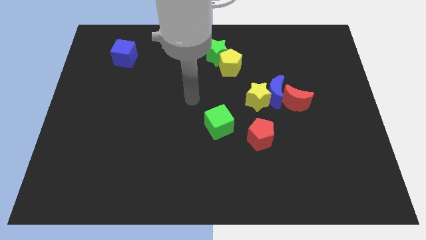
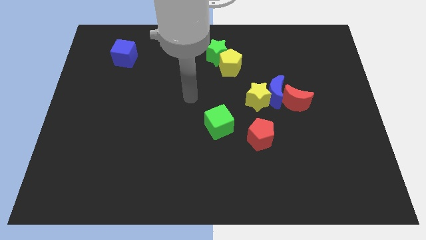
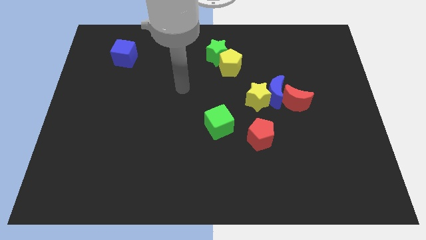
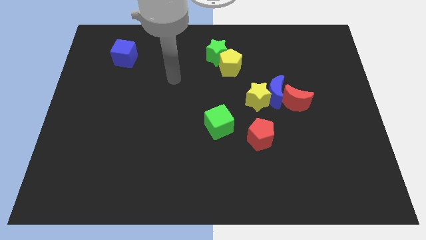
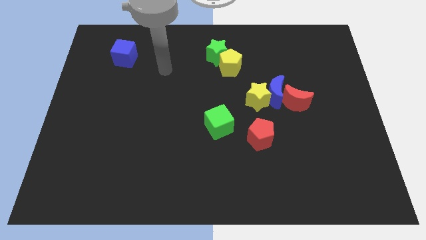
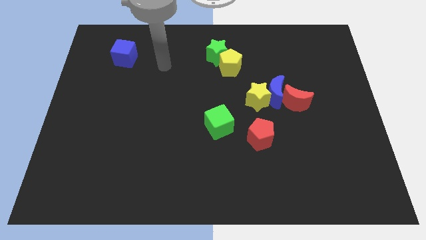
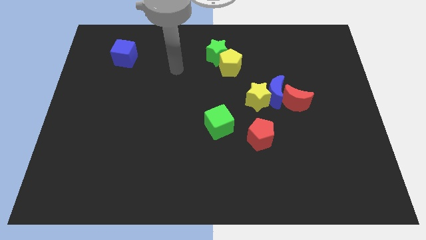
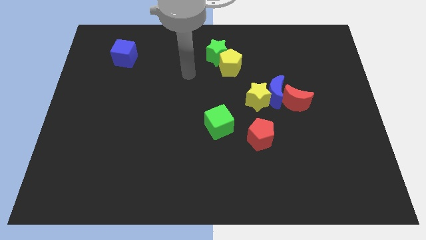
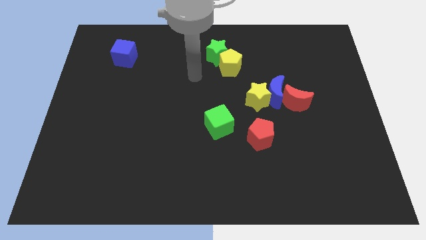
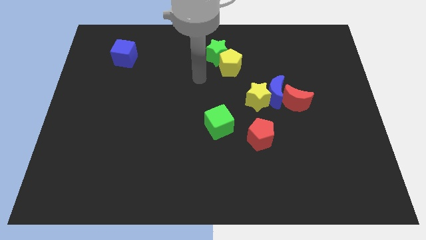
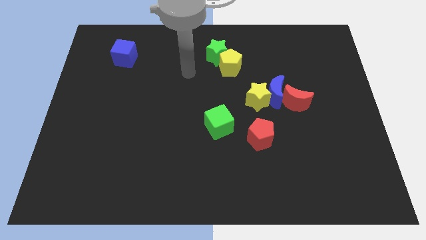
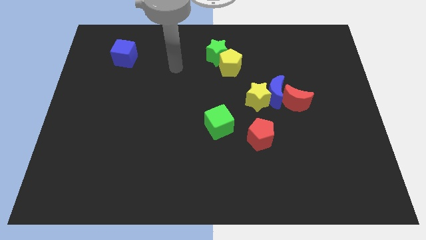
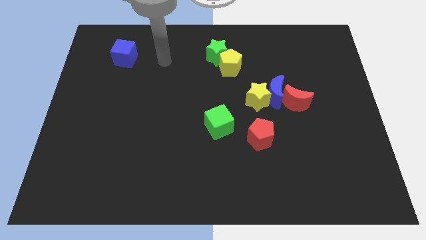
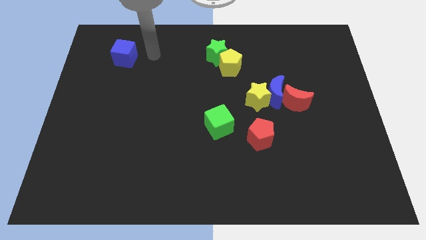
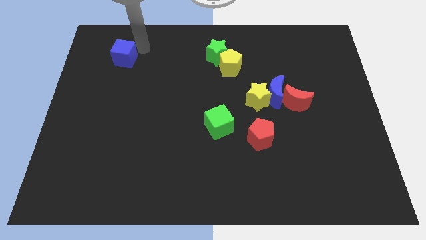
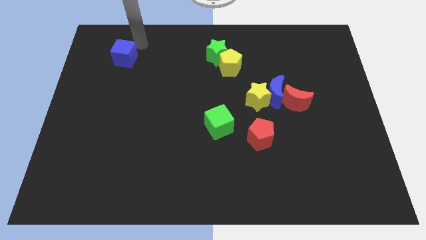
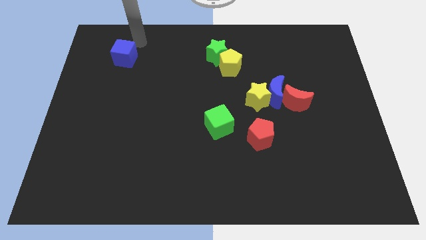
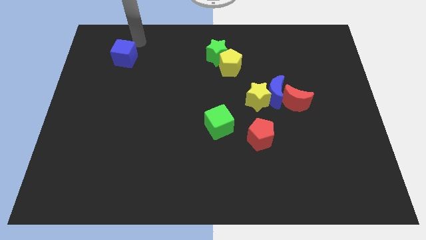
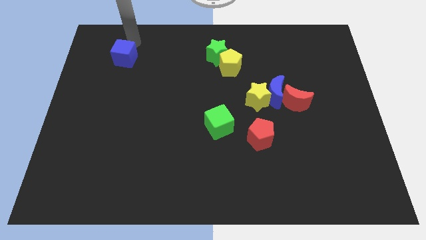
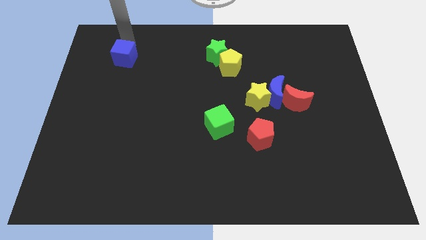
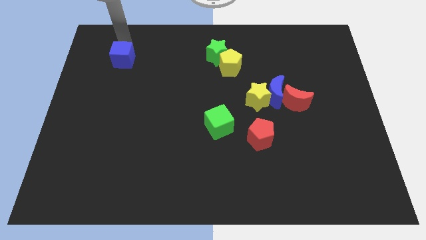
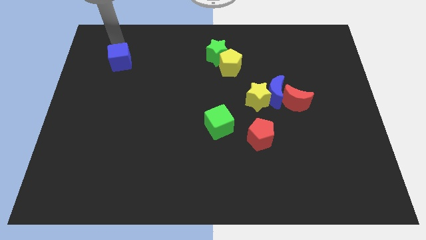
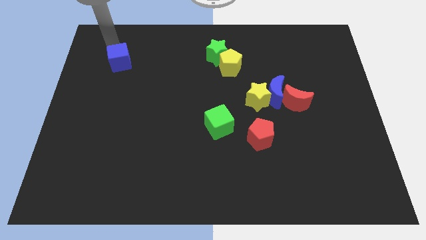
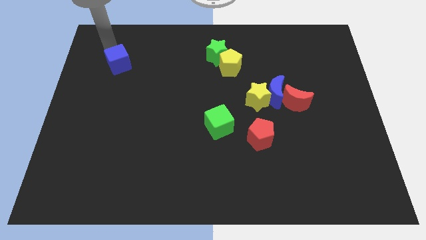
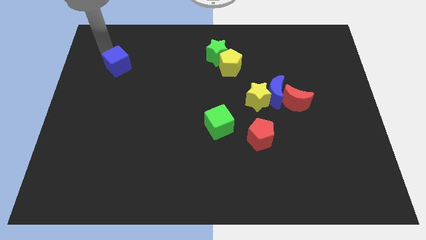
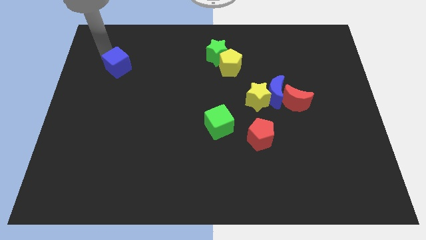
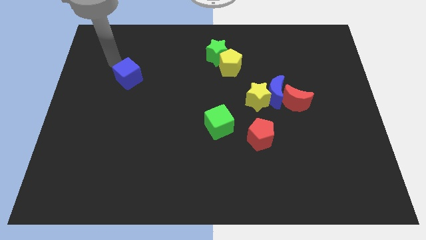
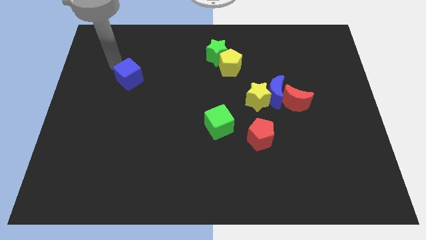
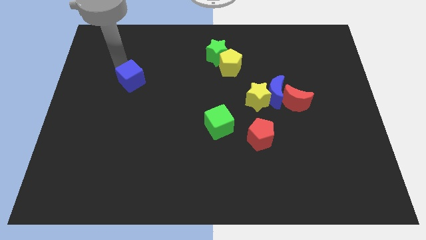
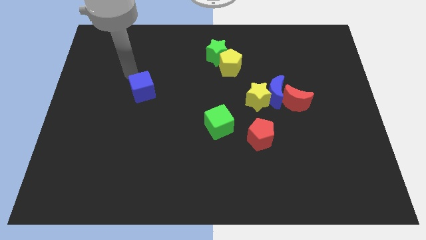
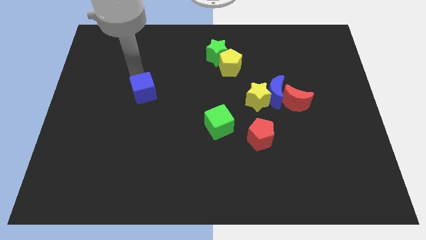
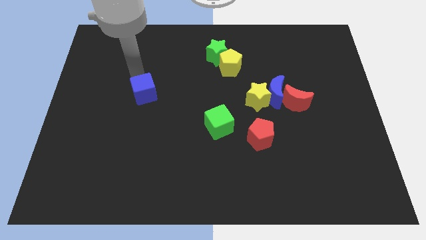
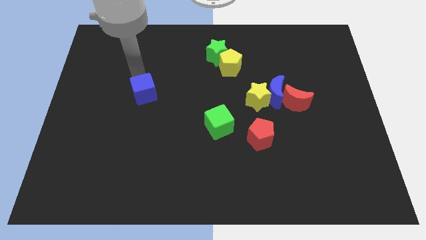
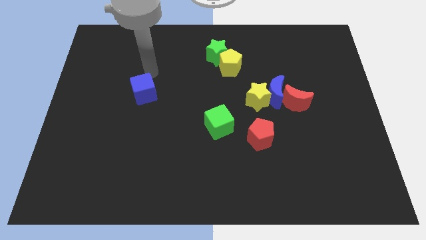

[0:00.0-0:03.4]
place the blue cube diagonally above the top left side of the green cube

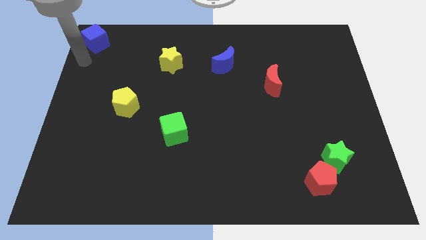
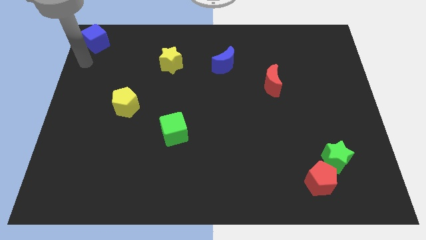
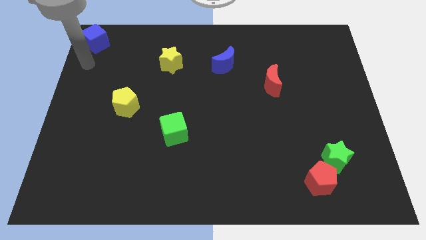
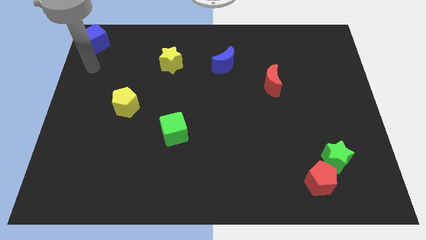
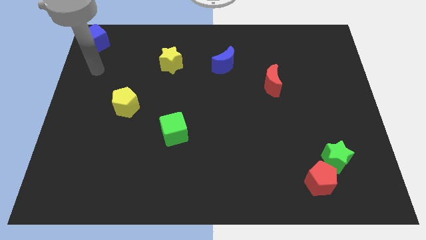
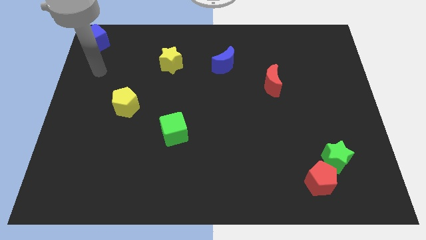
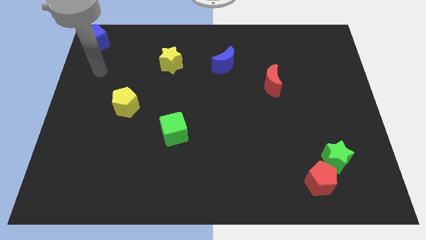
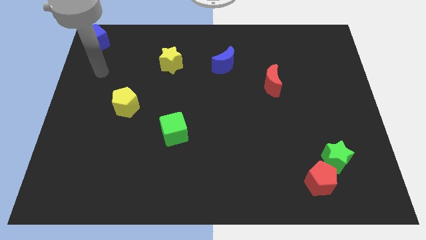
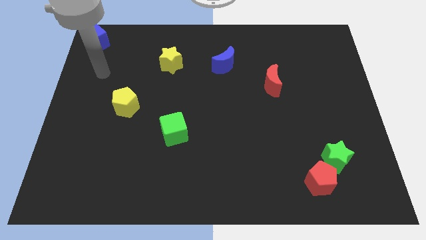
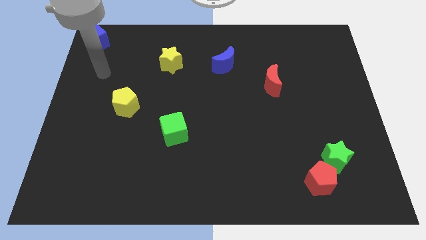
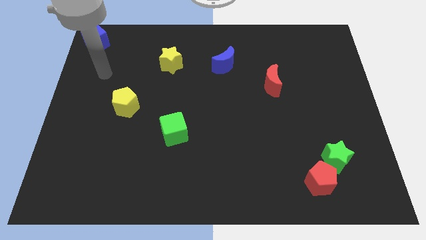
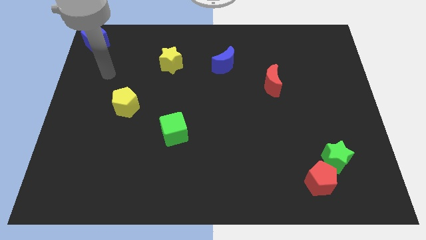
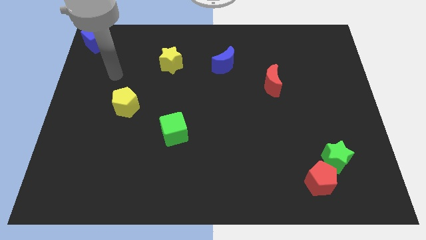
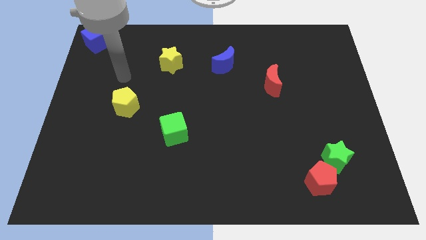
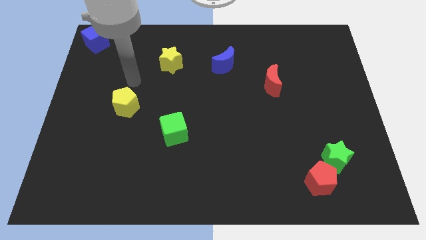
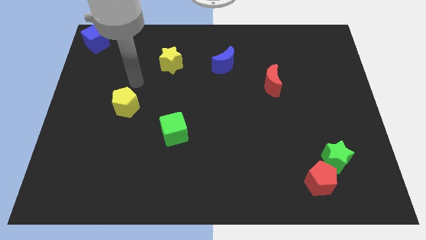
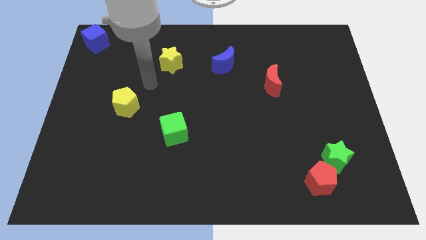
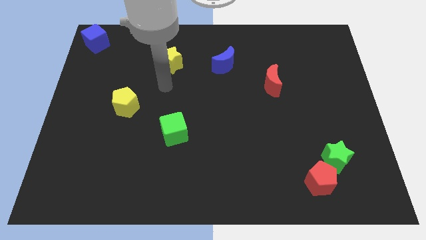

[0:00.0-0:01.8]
put your arm between the yellow blocks

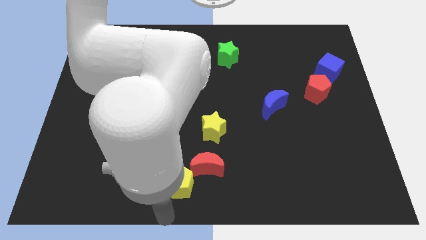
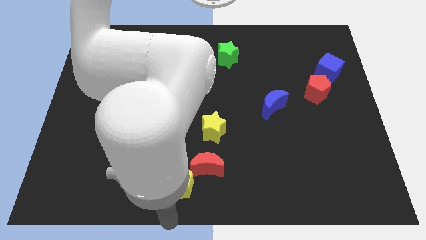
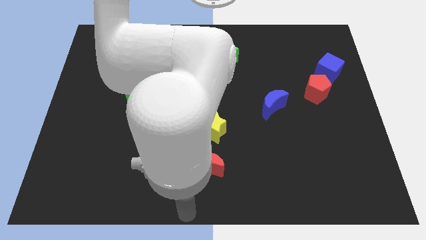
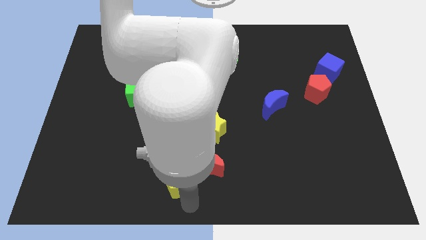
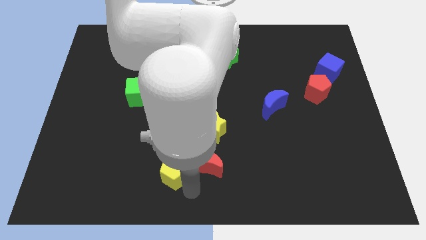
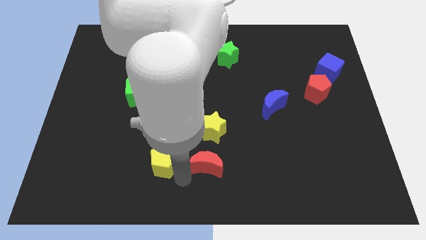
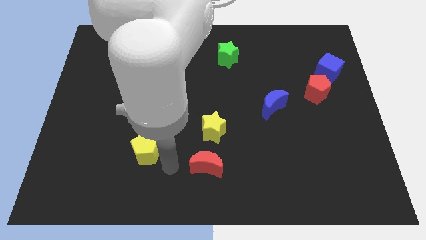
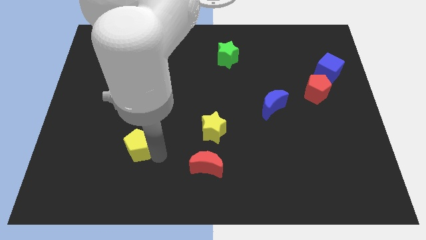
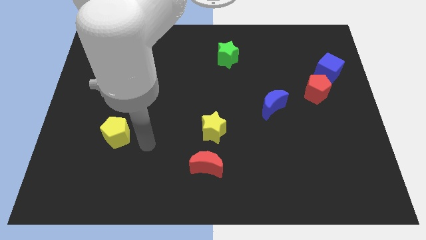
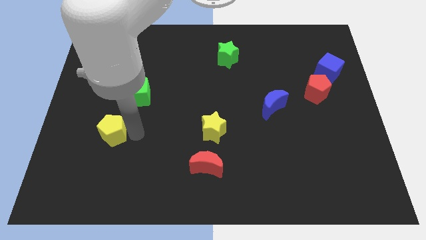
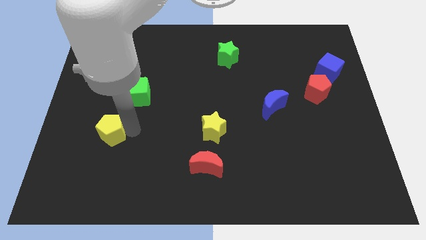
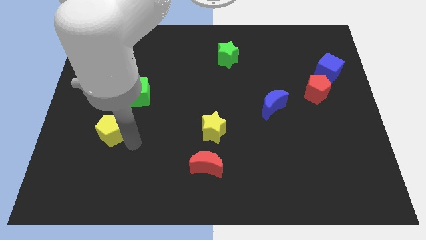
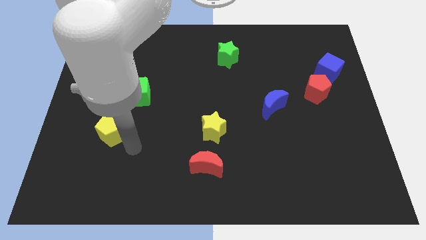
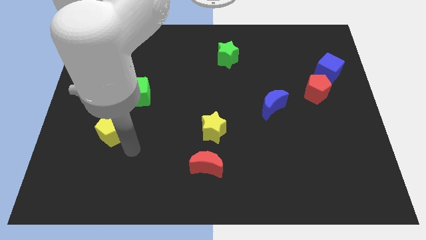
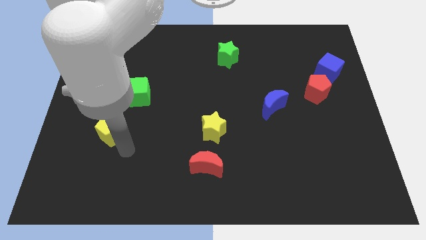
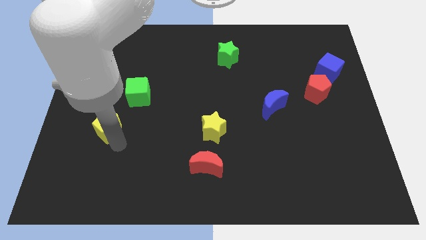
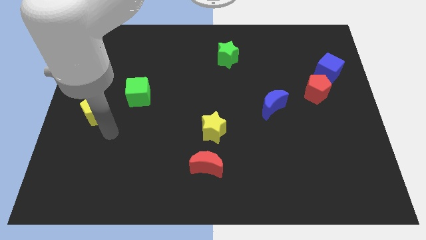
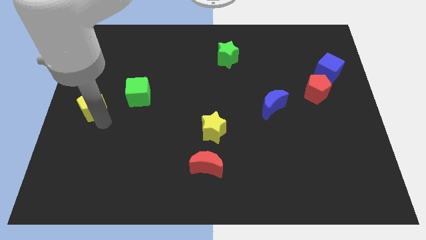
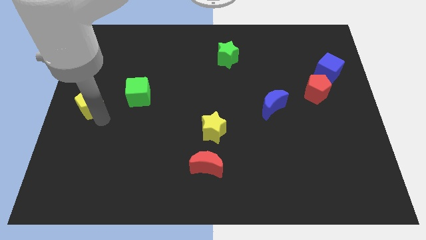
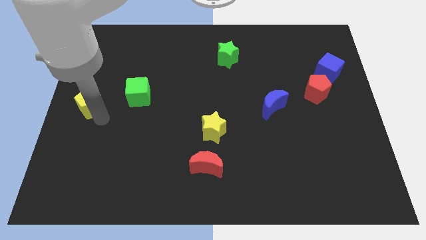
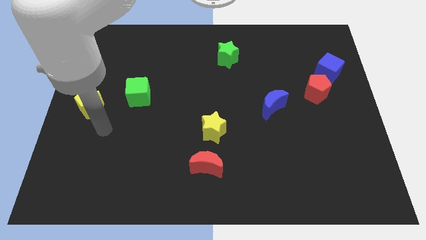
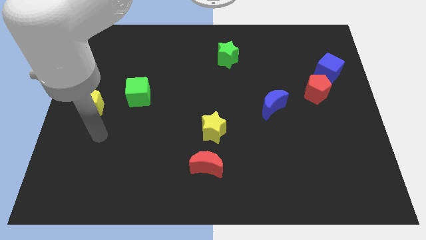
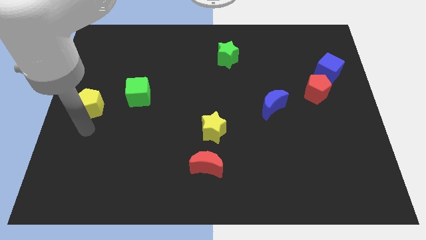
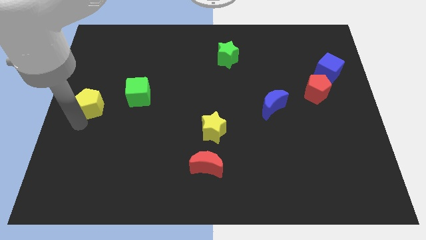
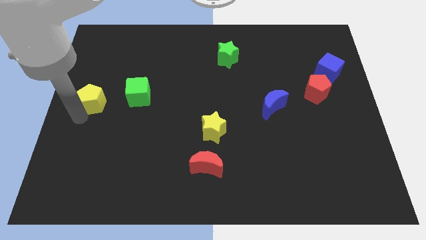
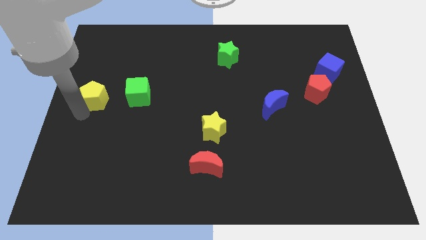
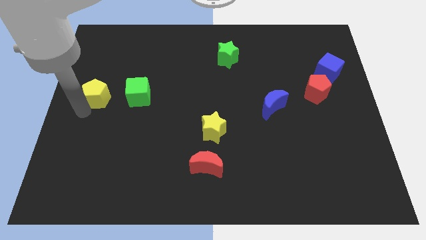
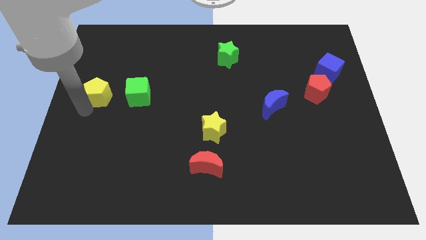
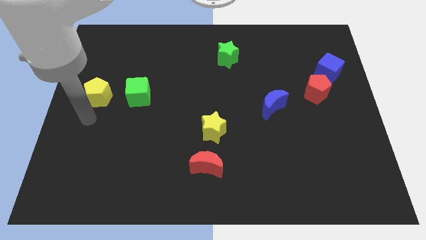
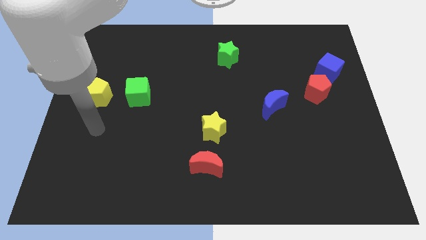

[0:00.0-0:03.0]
place the yellow pentagon to the left of green cube

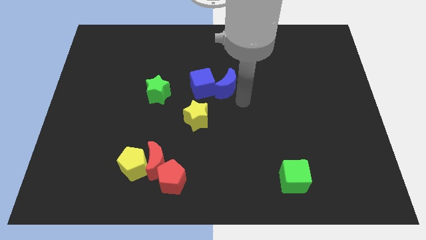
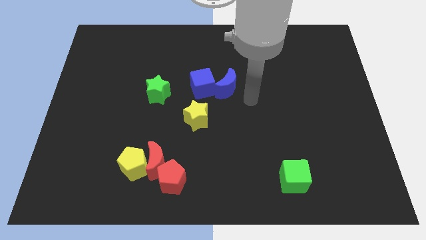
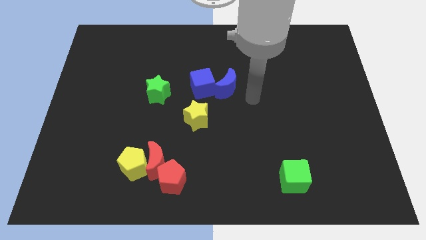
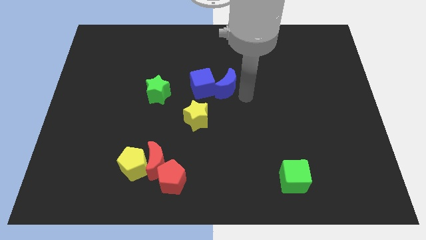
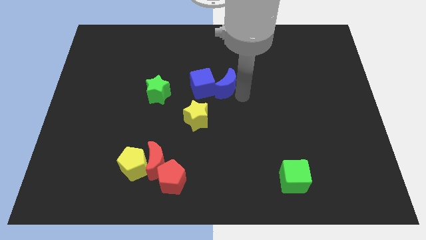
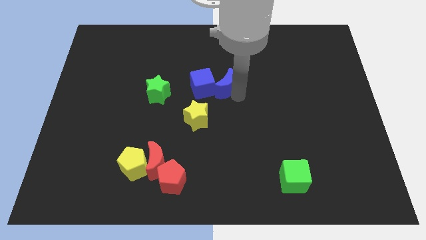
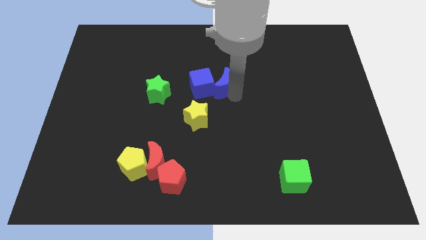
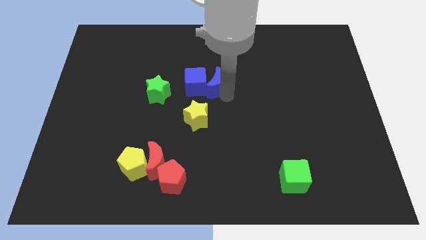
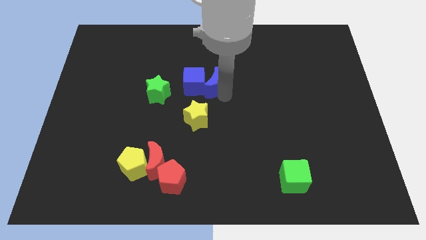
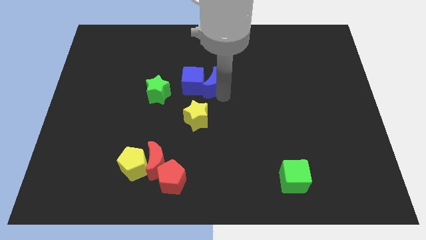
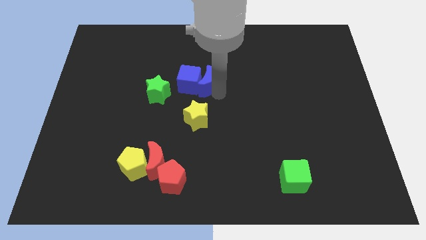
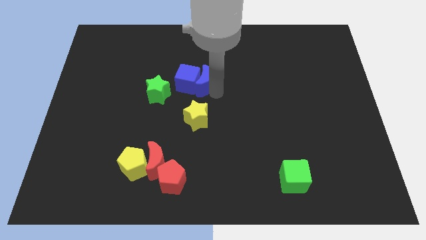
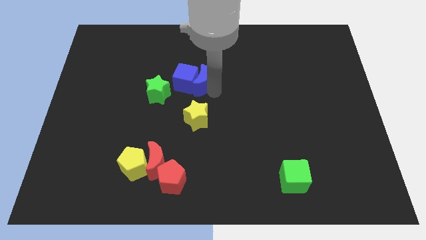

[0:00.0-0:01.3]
place the blue moon above the yellow star
